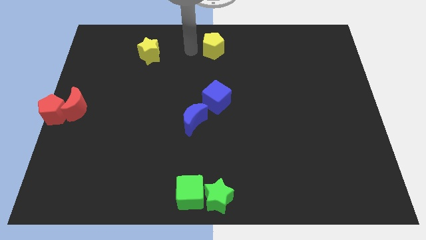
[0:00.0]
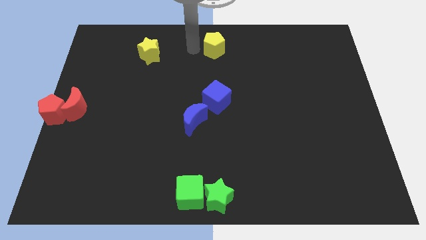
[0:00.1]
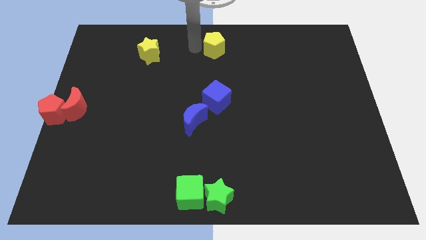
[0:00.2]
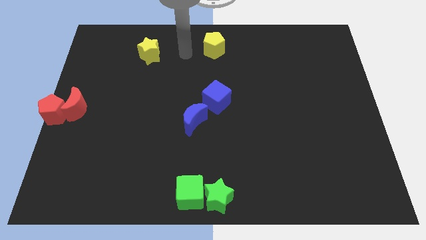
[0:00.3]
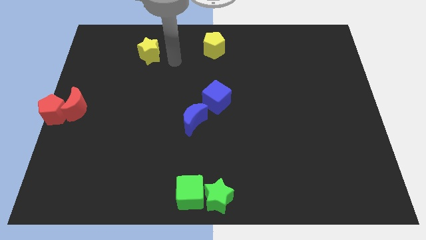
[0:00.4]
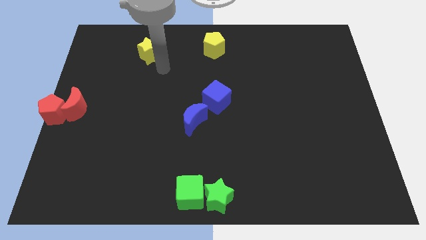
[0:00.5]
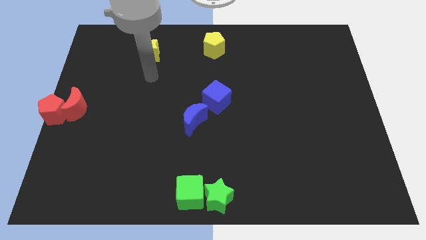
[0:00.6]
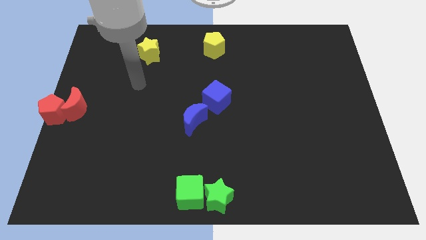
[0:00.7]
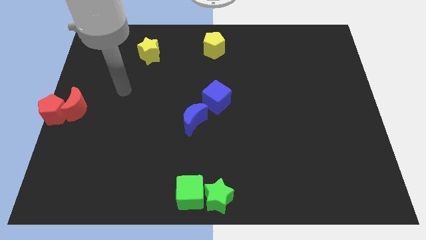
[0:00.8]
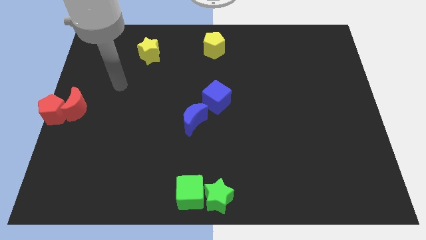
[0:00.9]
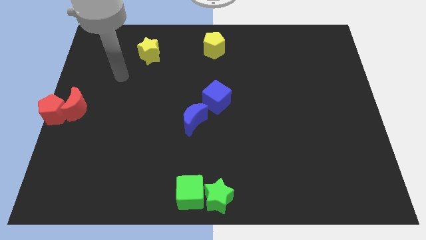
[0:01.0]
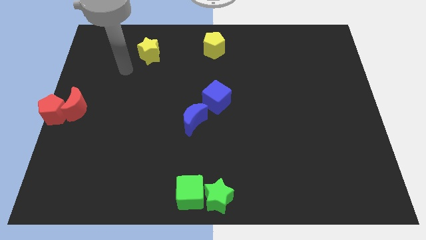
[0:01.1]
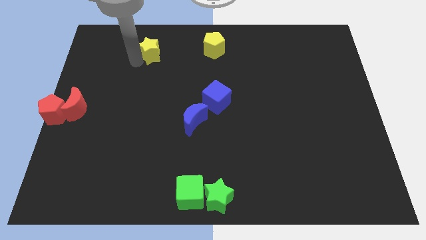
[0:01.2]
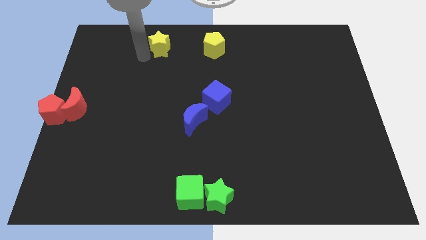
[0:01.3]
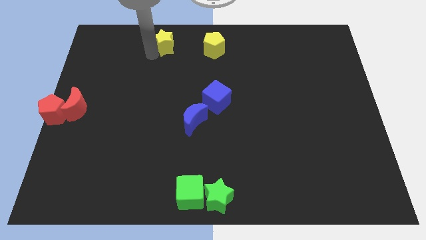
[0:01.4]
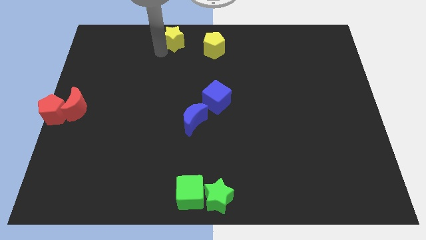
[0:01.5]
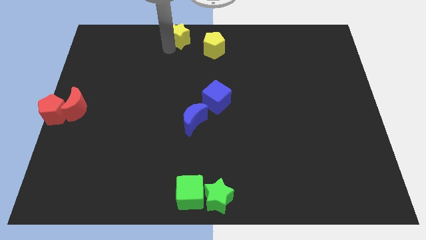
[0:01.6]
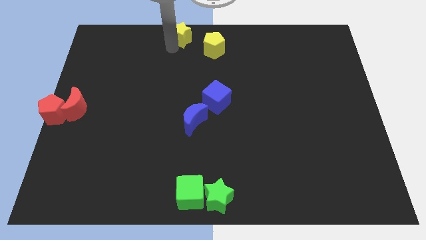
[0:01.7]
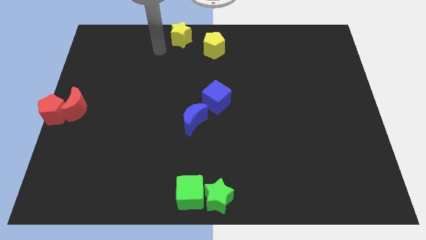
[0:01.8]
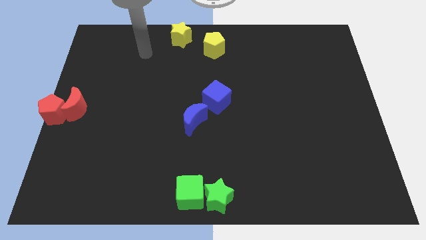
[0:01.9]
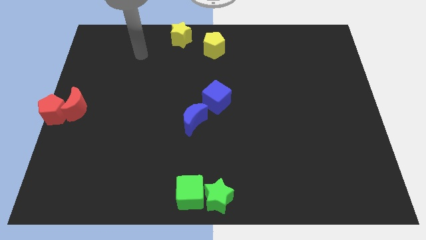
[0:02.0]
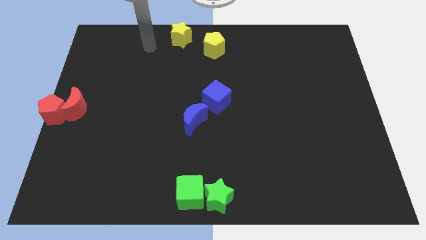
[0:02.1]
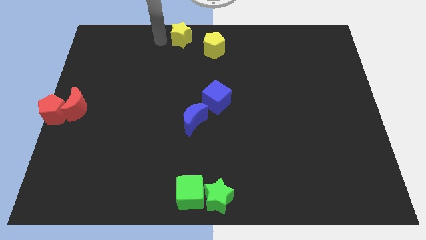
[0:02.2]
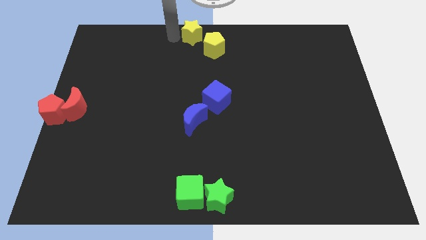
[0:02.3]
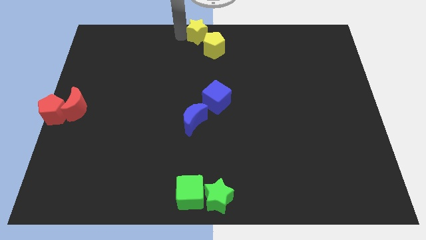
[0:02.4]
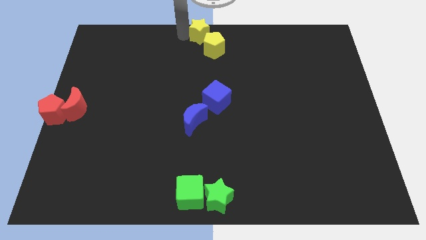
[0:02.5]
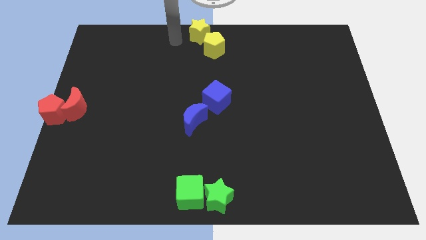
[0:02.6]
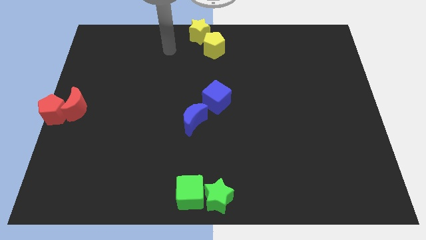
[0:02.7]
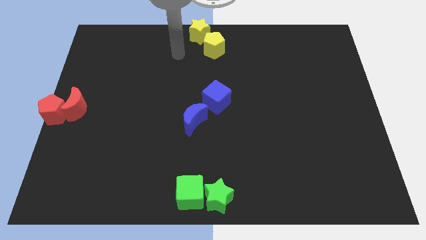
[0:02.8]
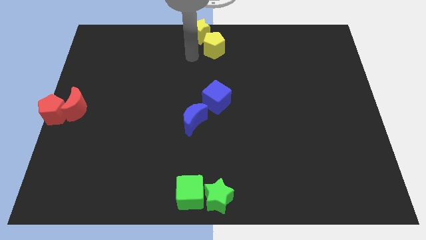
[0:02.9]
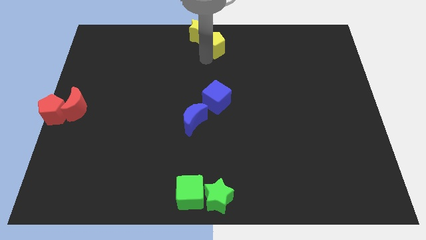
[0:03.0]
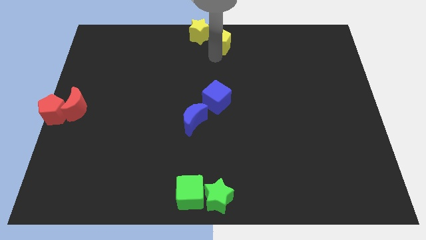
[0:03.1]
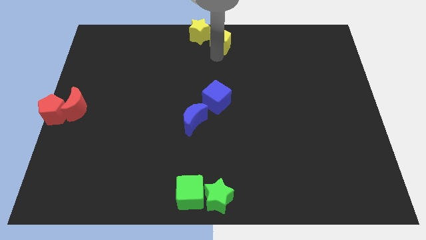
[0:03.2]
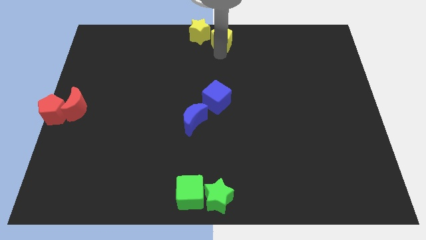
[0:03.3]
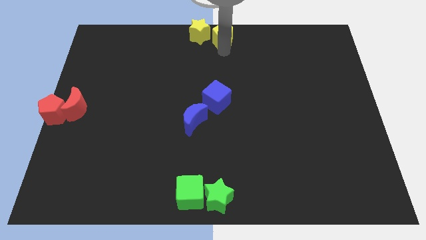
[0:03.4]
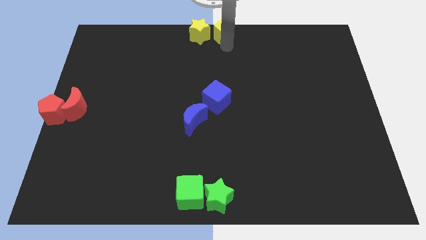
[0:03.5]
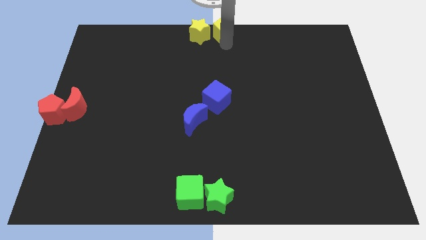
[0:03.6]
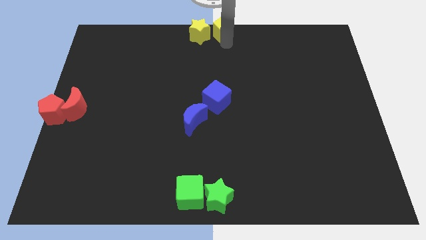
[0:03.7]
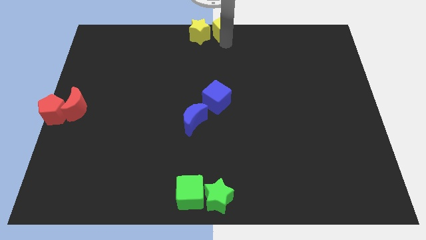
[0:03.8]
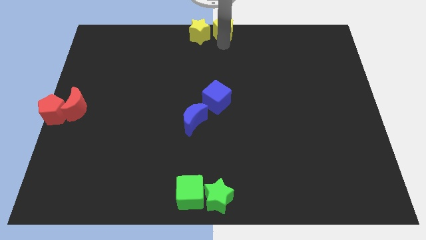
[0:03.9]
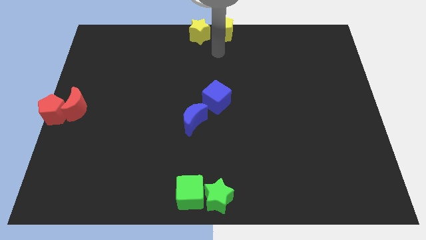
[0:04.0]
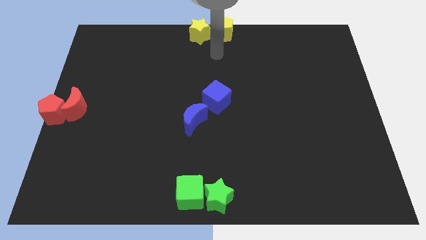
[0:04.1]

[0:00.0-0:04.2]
place the yellow star and yellow pentagon at the top center

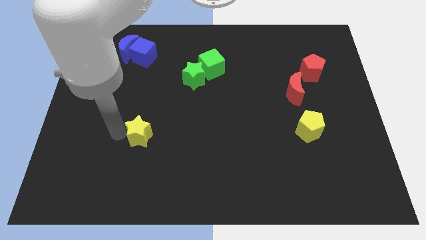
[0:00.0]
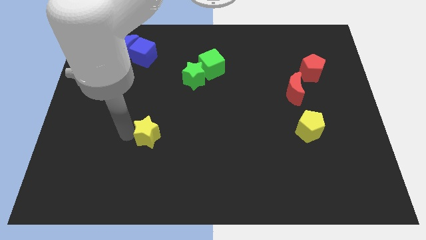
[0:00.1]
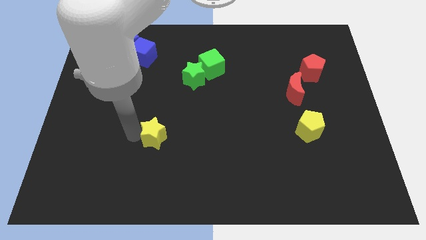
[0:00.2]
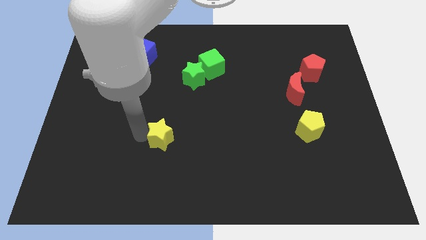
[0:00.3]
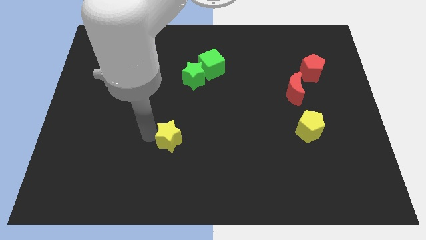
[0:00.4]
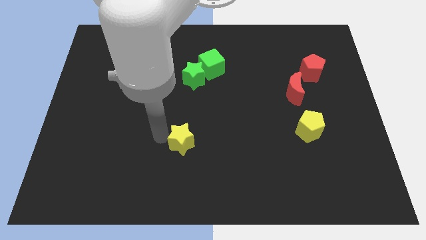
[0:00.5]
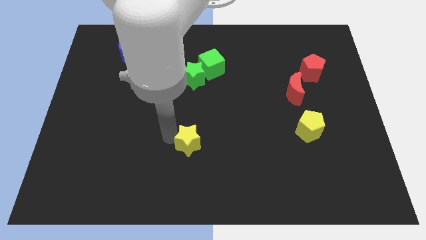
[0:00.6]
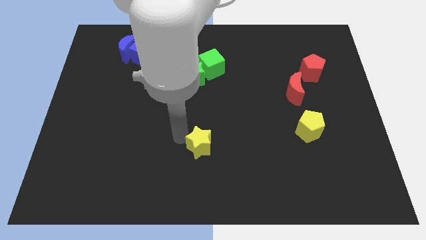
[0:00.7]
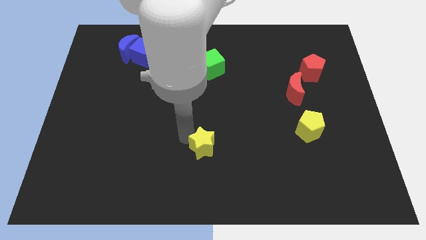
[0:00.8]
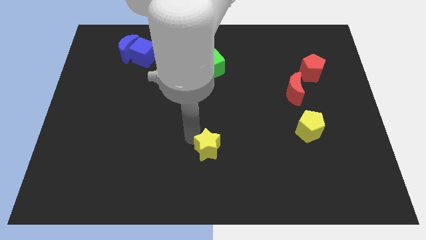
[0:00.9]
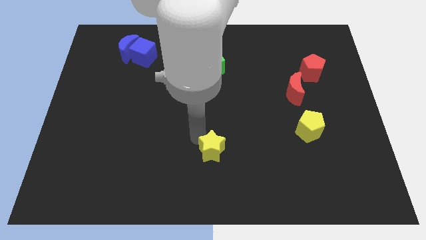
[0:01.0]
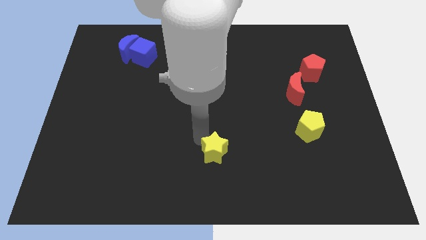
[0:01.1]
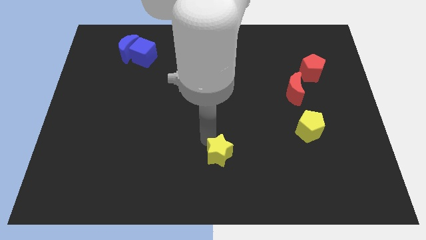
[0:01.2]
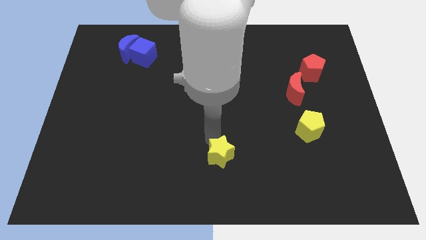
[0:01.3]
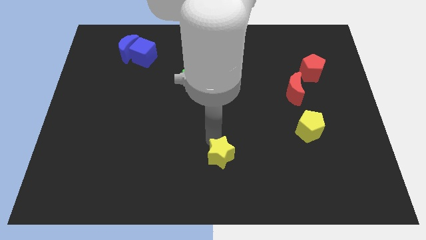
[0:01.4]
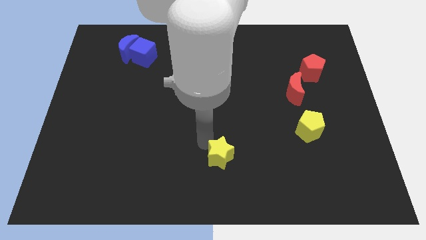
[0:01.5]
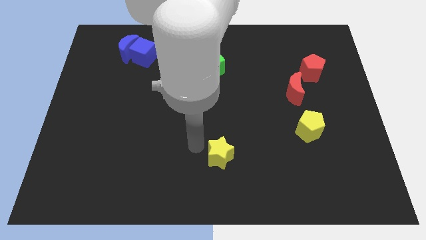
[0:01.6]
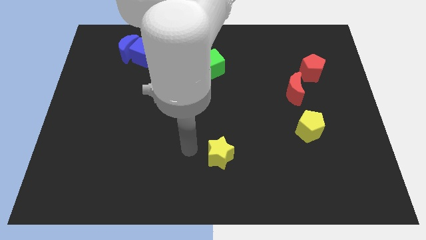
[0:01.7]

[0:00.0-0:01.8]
push the yellow star to the bottom of the green cube

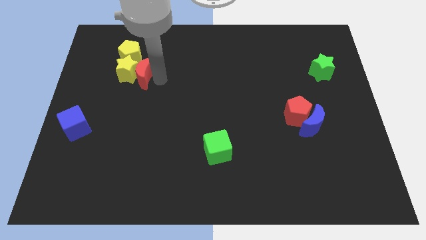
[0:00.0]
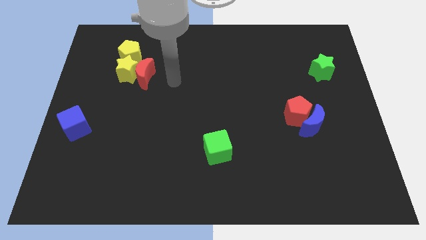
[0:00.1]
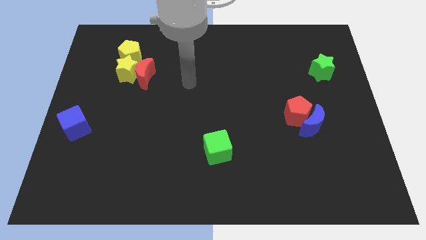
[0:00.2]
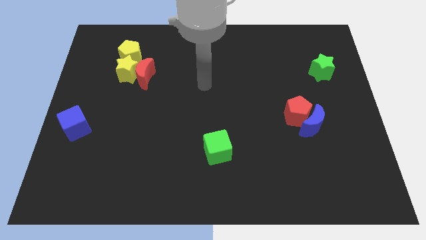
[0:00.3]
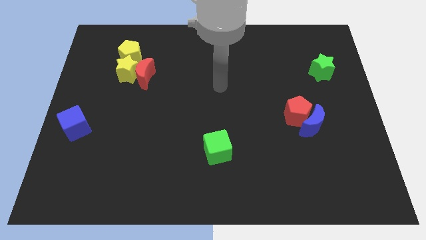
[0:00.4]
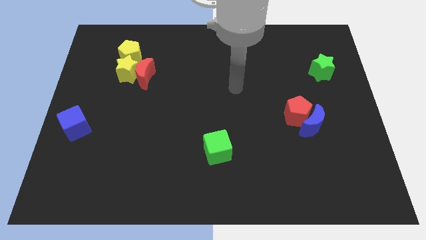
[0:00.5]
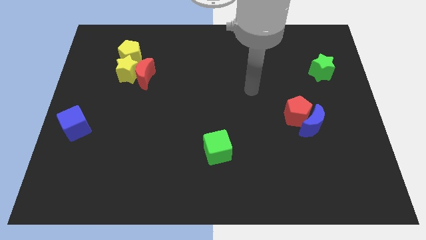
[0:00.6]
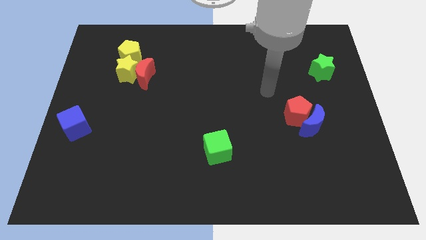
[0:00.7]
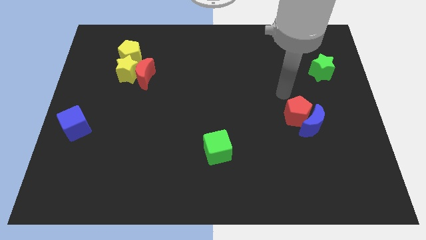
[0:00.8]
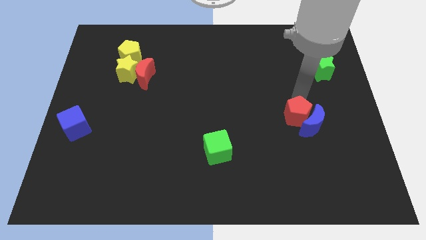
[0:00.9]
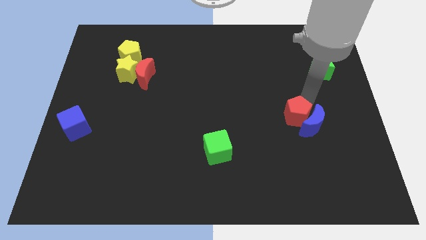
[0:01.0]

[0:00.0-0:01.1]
point at the top right side of the red pentagon

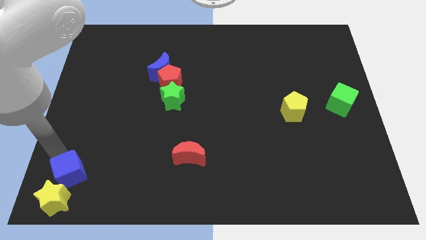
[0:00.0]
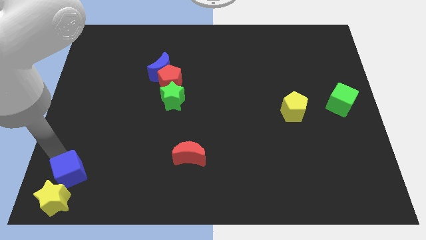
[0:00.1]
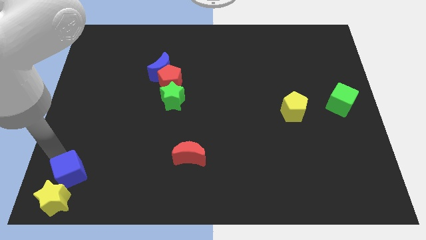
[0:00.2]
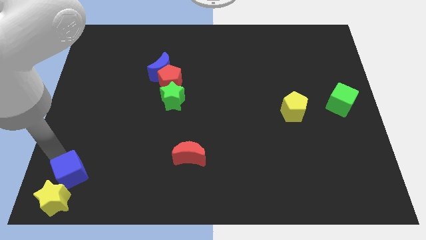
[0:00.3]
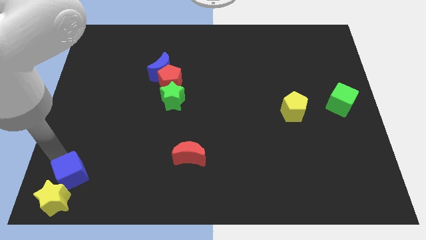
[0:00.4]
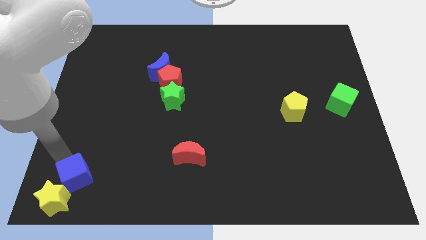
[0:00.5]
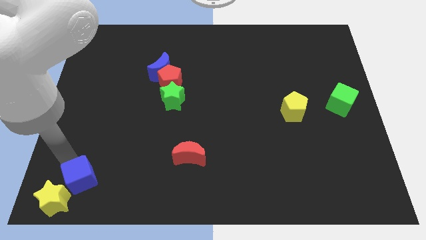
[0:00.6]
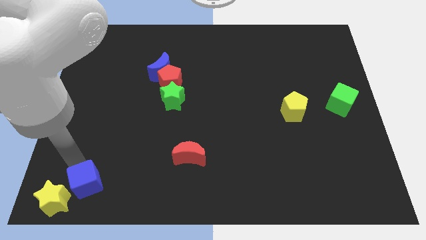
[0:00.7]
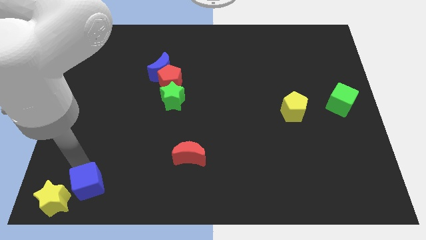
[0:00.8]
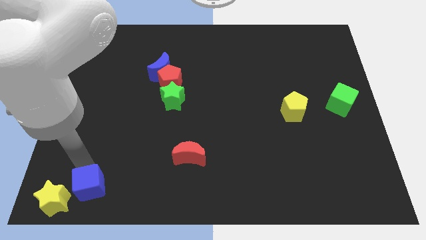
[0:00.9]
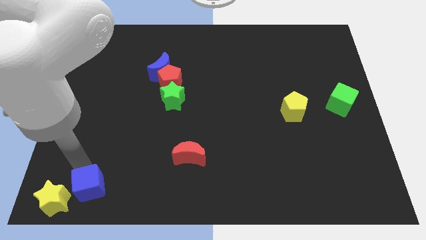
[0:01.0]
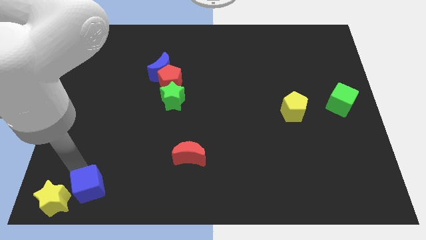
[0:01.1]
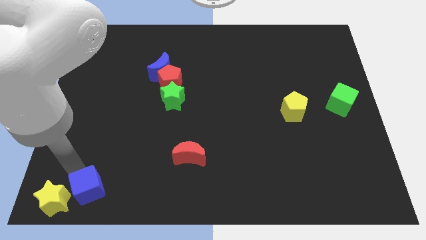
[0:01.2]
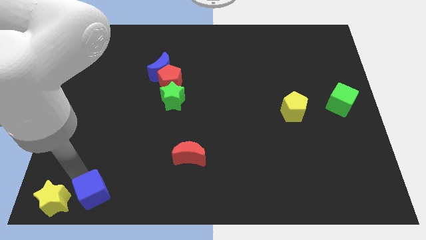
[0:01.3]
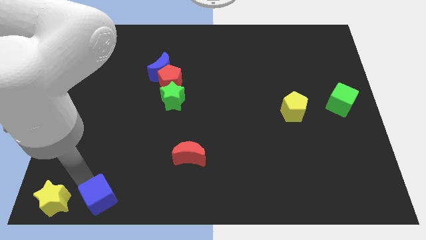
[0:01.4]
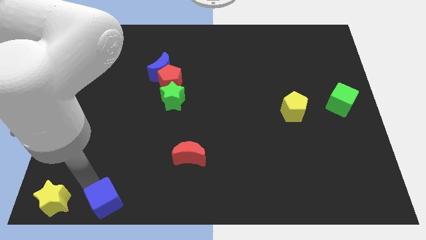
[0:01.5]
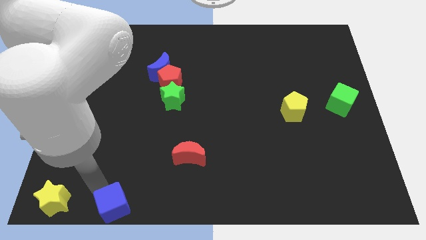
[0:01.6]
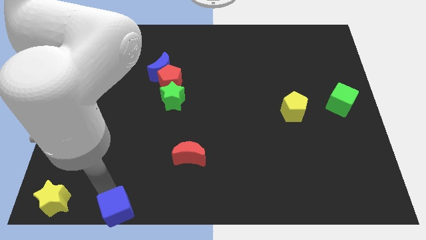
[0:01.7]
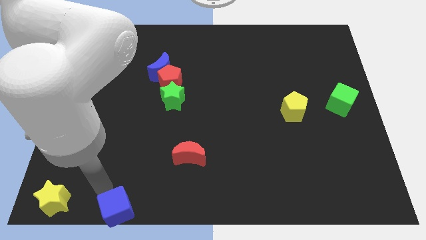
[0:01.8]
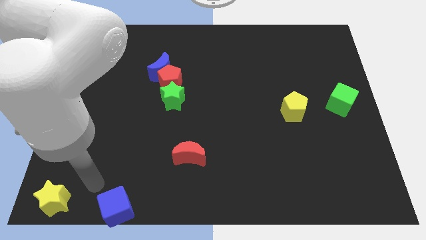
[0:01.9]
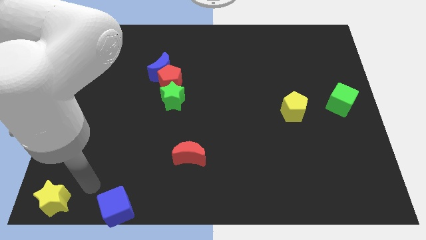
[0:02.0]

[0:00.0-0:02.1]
separate blue cube from yellow star
